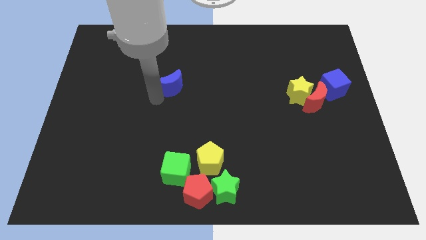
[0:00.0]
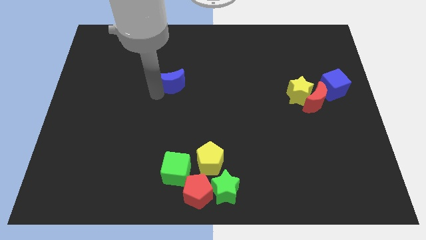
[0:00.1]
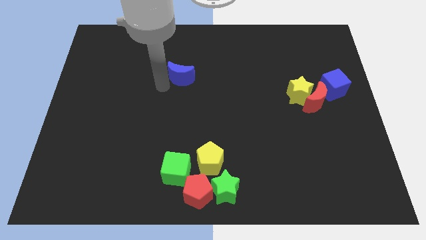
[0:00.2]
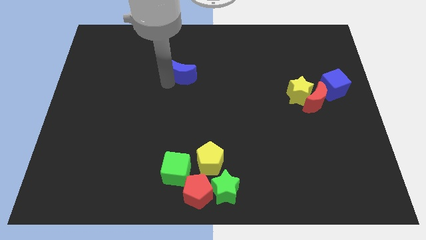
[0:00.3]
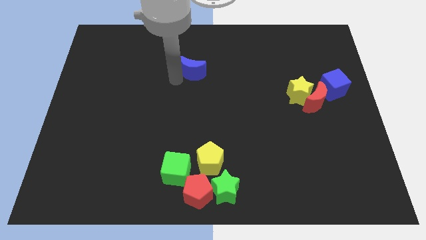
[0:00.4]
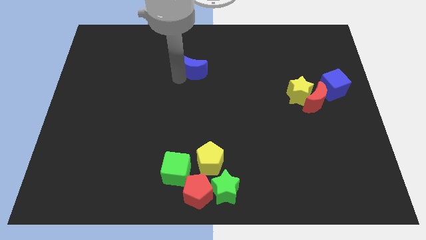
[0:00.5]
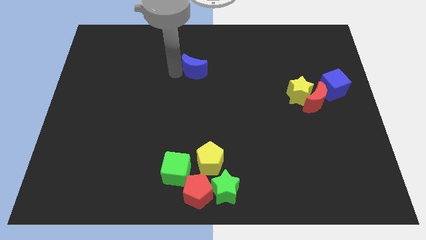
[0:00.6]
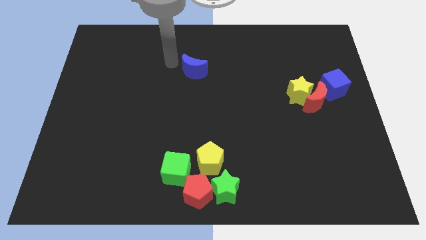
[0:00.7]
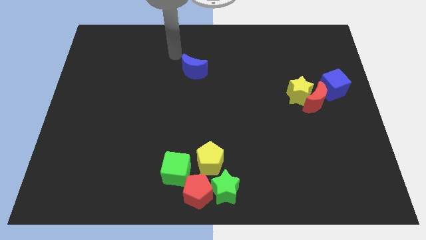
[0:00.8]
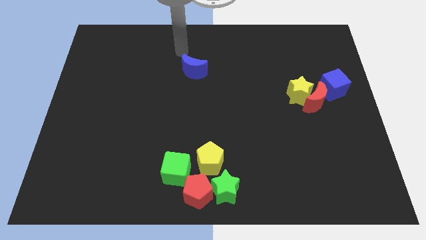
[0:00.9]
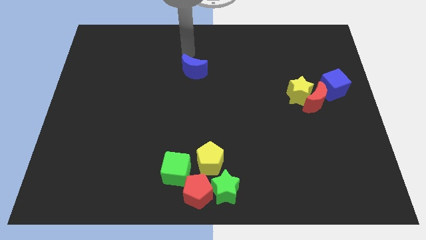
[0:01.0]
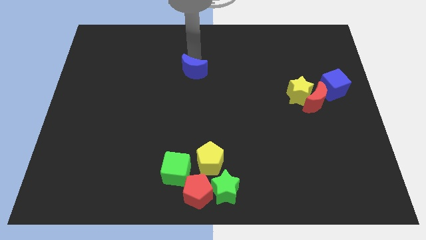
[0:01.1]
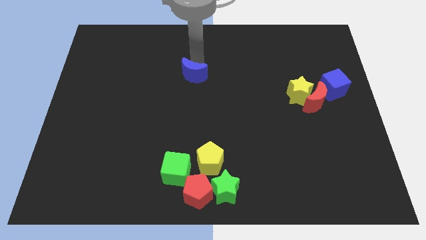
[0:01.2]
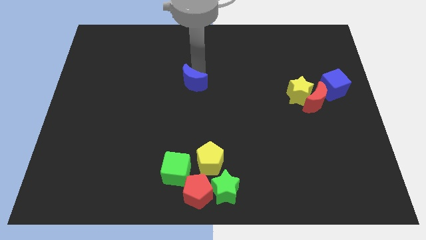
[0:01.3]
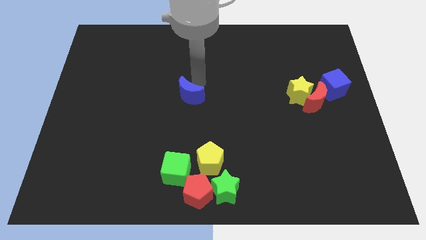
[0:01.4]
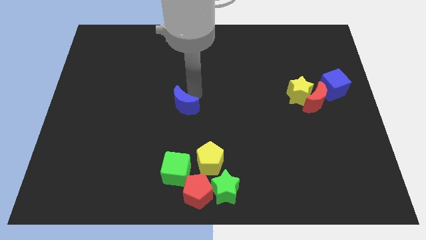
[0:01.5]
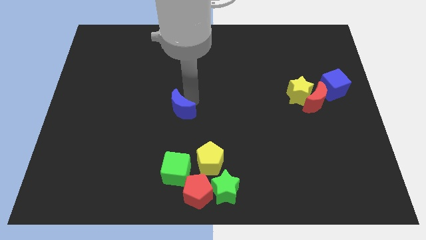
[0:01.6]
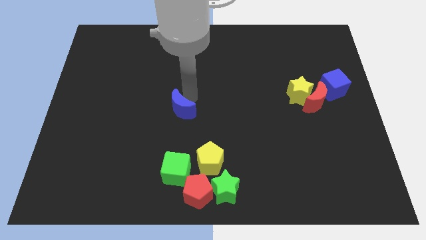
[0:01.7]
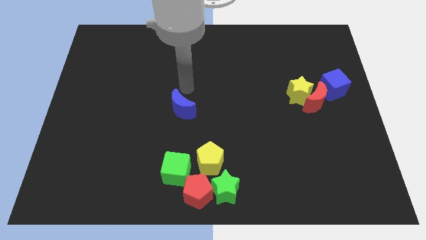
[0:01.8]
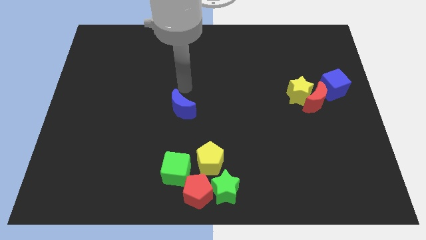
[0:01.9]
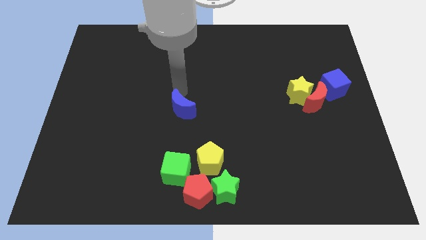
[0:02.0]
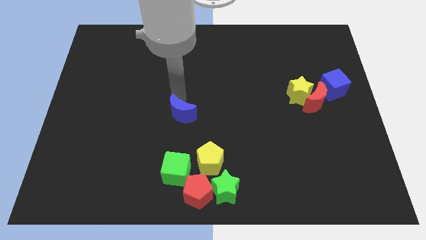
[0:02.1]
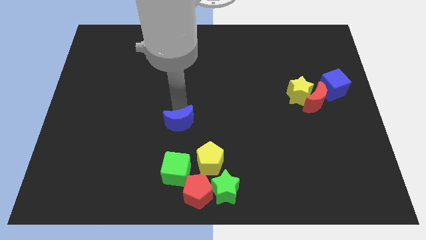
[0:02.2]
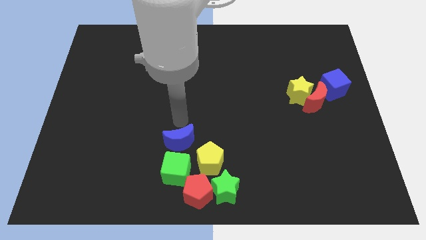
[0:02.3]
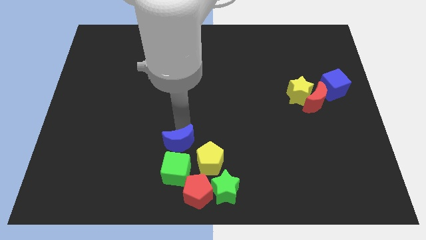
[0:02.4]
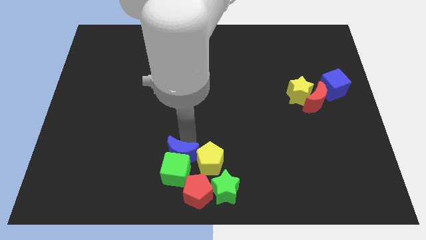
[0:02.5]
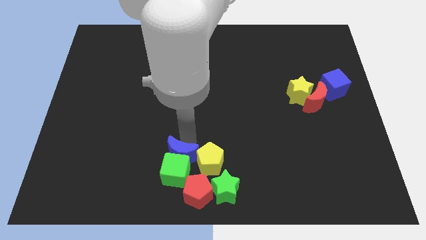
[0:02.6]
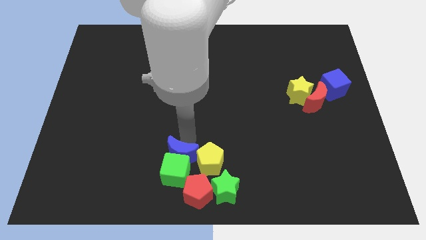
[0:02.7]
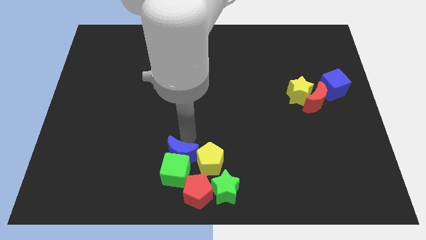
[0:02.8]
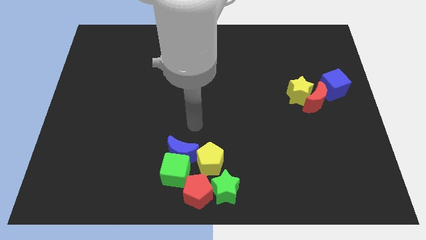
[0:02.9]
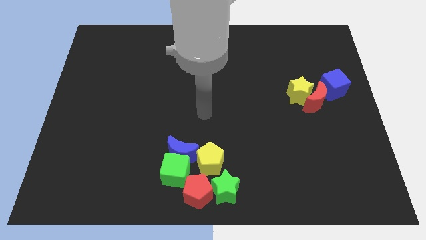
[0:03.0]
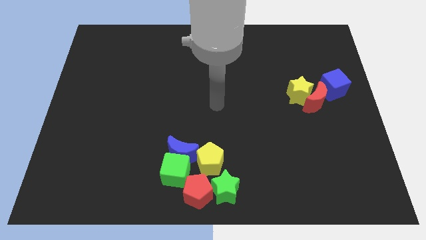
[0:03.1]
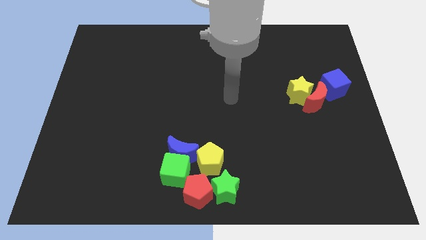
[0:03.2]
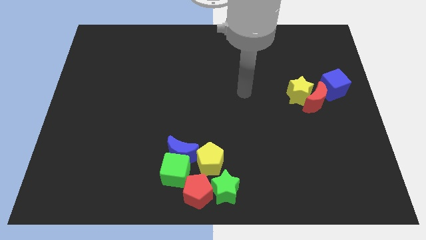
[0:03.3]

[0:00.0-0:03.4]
push the blue moon into a group of blocks

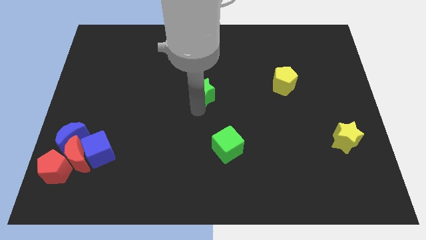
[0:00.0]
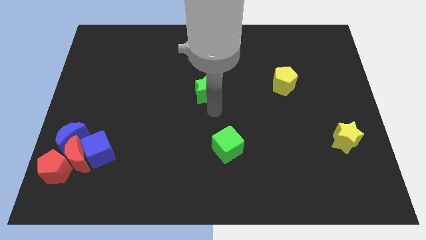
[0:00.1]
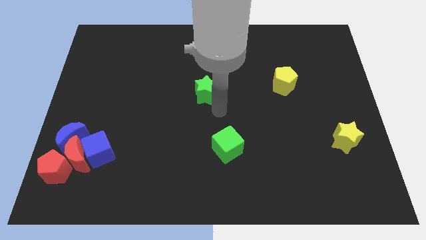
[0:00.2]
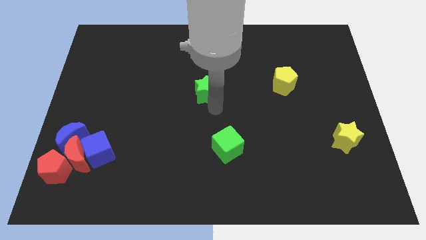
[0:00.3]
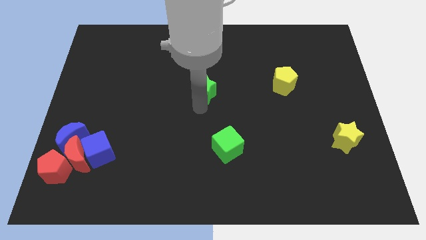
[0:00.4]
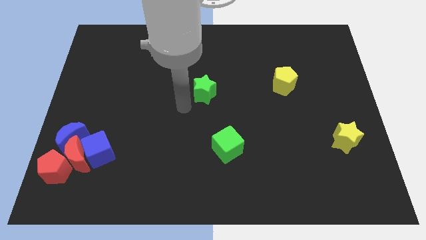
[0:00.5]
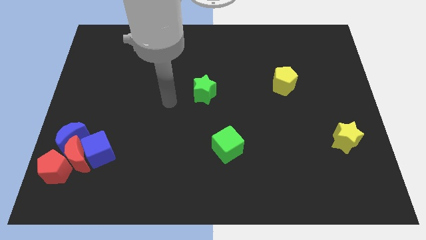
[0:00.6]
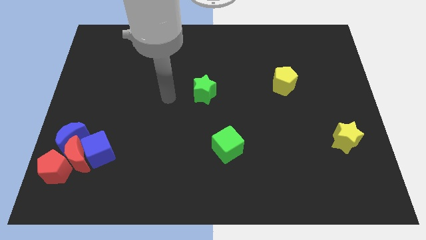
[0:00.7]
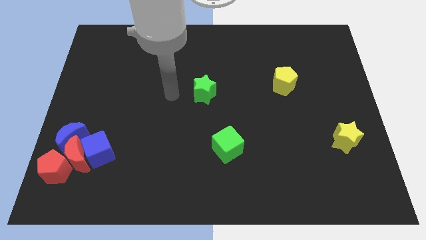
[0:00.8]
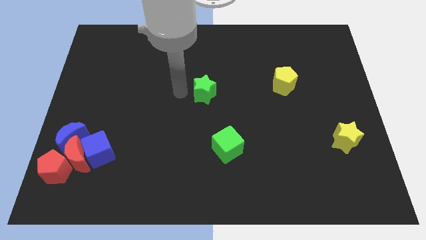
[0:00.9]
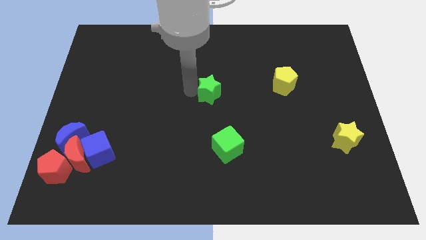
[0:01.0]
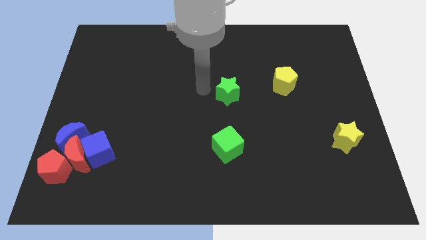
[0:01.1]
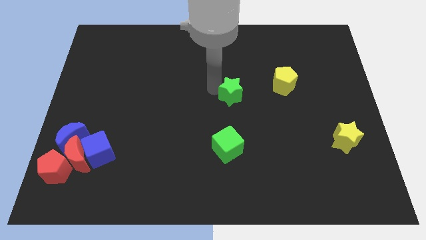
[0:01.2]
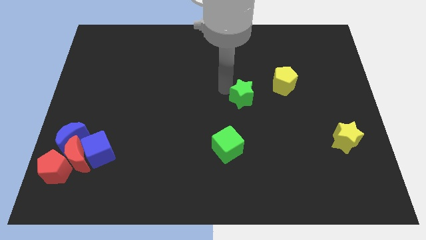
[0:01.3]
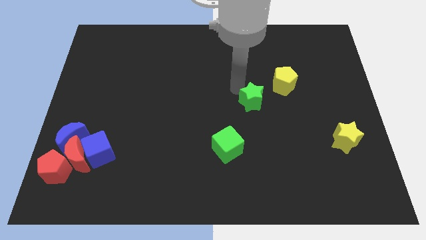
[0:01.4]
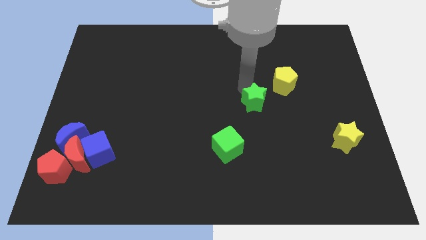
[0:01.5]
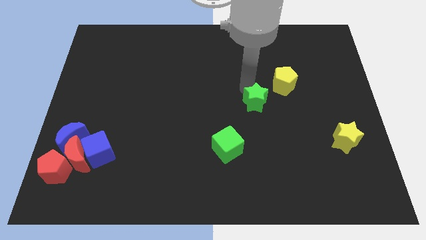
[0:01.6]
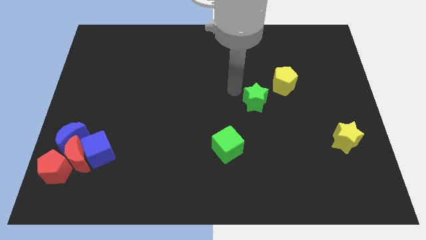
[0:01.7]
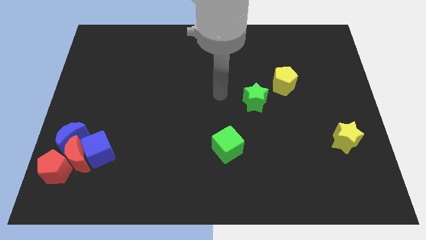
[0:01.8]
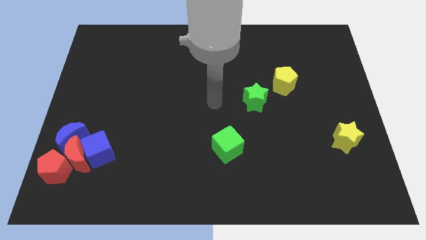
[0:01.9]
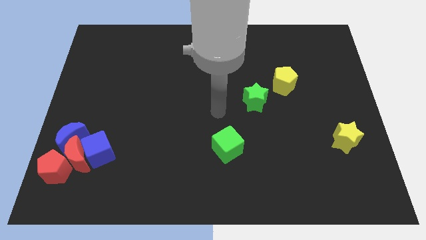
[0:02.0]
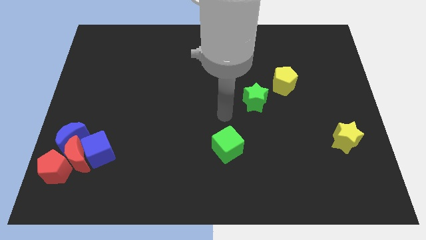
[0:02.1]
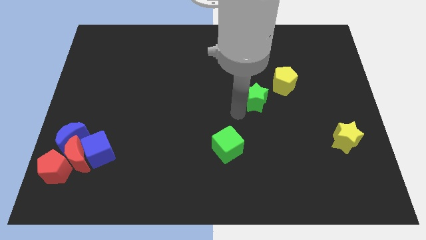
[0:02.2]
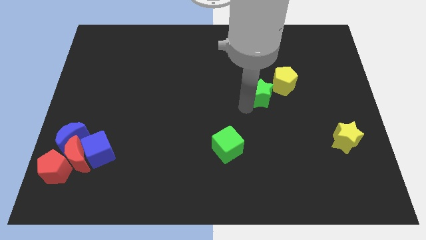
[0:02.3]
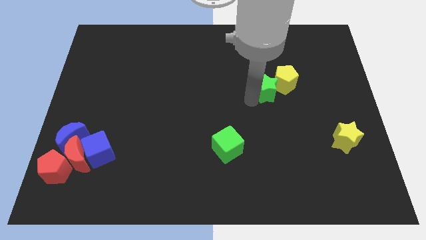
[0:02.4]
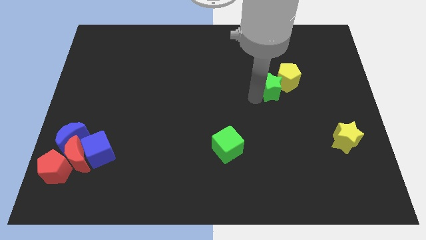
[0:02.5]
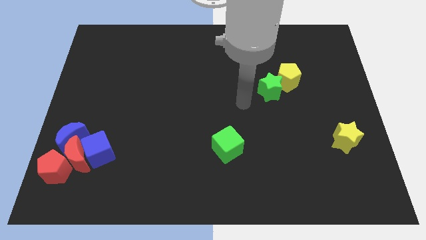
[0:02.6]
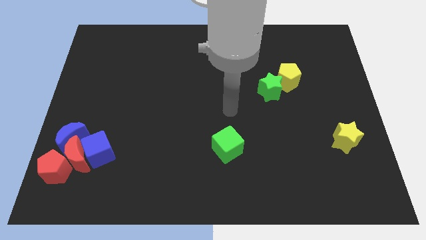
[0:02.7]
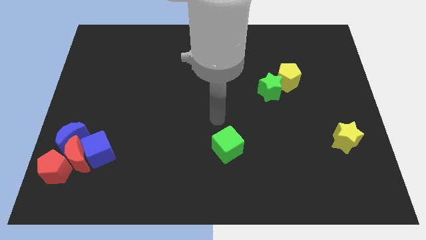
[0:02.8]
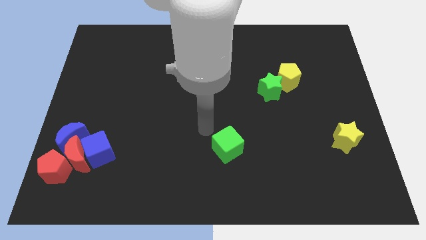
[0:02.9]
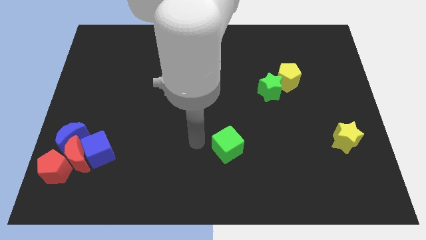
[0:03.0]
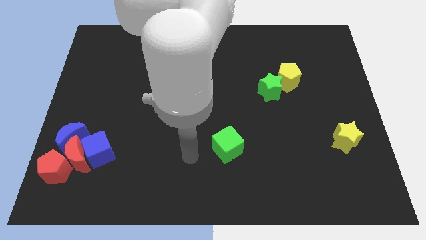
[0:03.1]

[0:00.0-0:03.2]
push the green star into the yellow pentagon

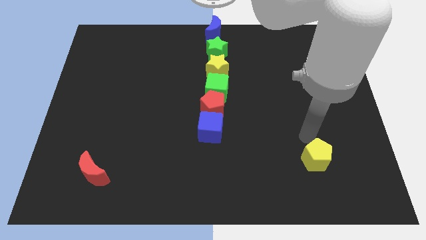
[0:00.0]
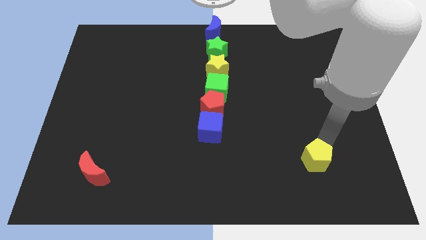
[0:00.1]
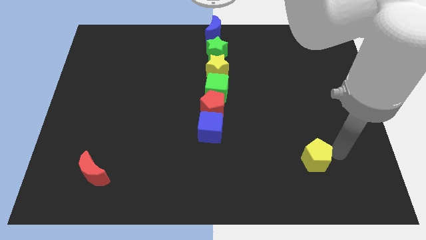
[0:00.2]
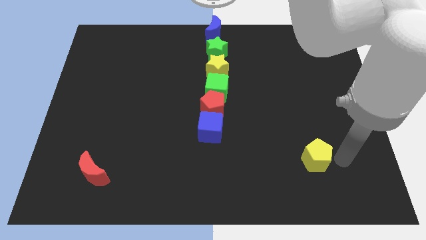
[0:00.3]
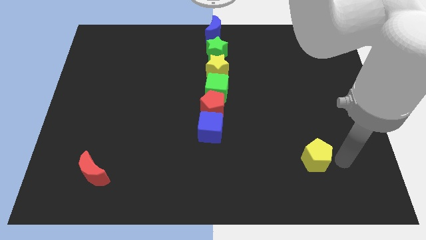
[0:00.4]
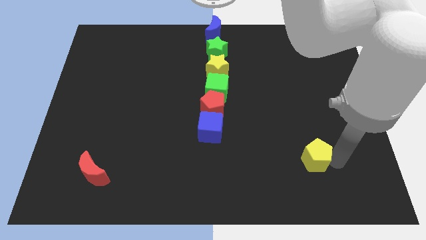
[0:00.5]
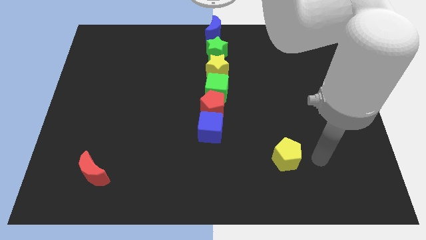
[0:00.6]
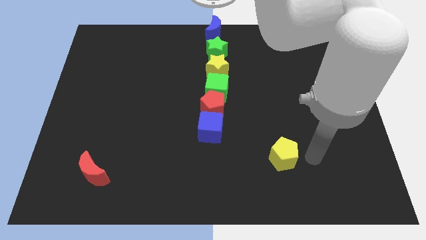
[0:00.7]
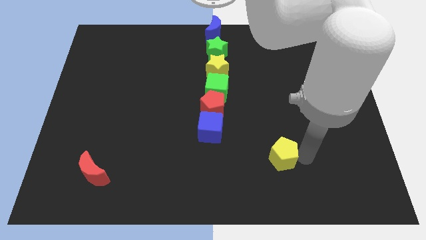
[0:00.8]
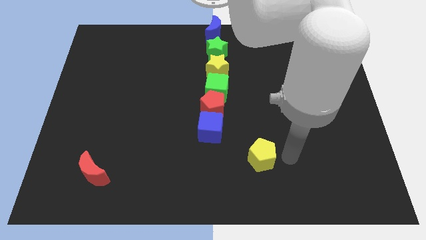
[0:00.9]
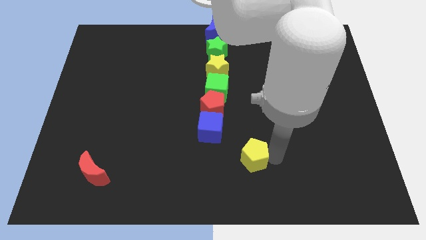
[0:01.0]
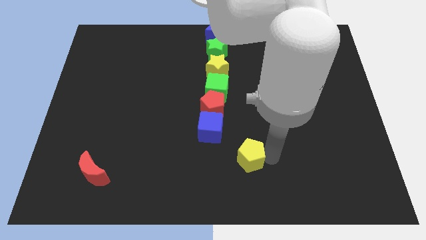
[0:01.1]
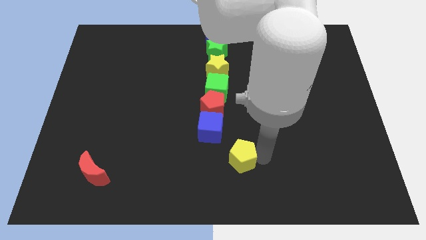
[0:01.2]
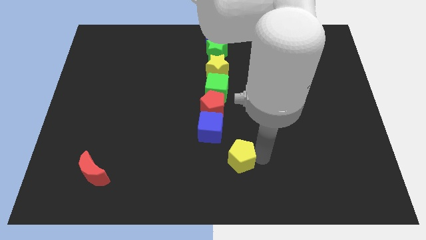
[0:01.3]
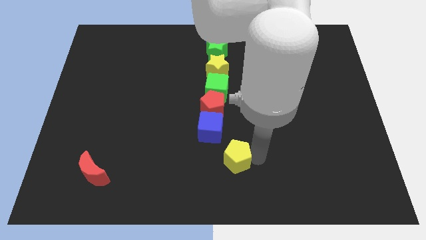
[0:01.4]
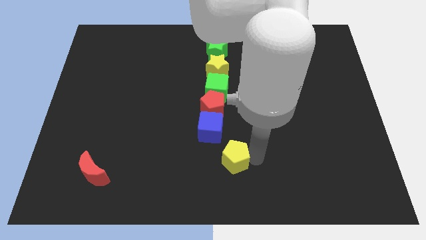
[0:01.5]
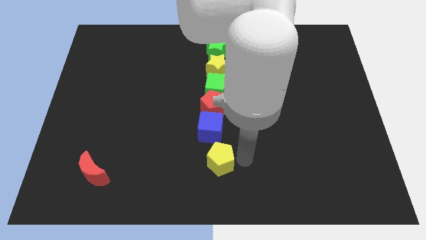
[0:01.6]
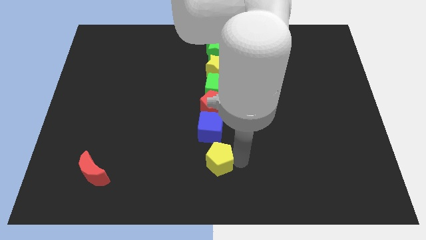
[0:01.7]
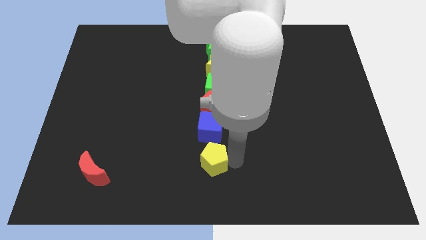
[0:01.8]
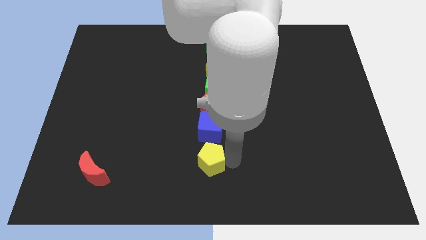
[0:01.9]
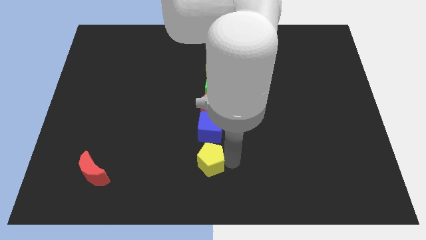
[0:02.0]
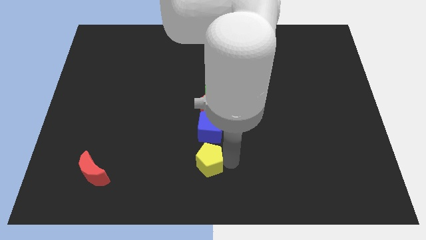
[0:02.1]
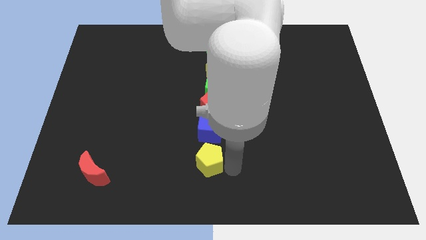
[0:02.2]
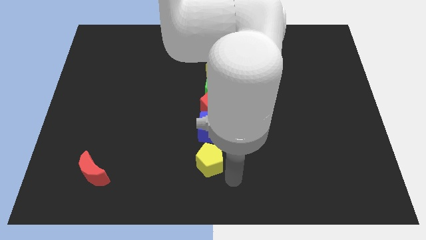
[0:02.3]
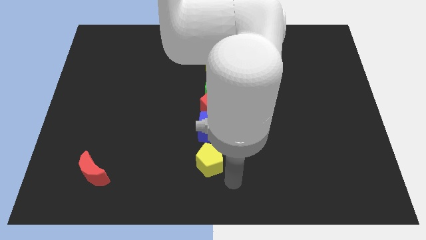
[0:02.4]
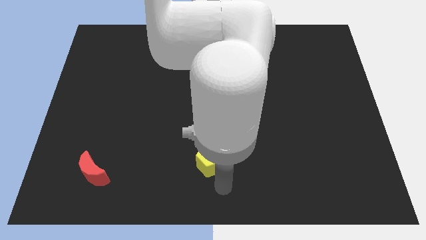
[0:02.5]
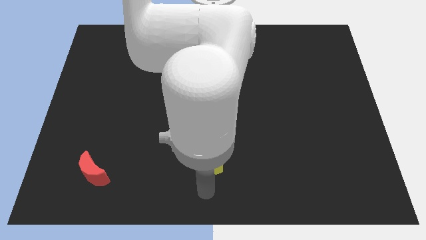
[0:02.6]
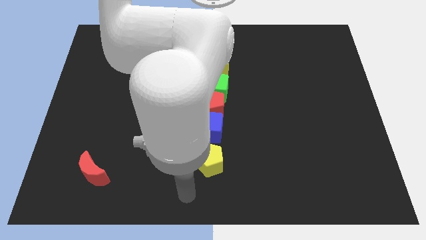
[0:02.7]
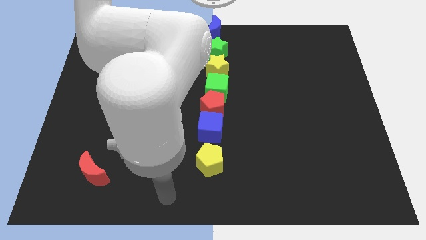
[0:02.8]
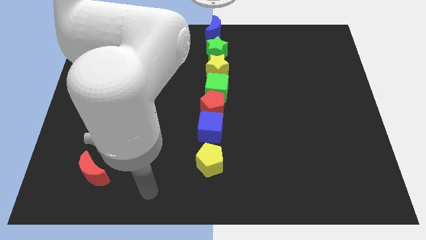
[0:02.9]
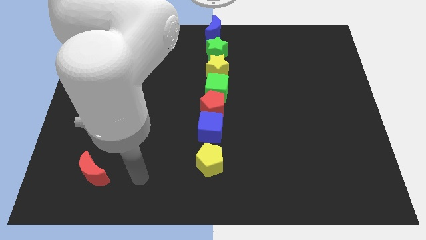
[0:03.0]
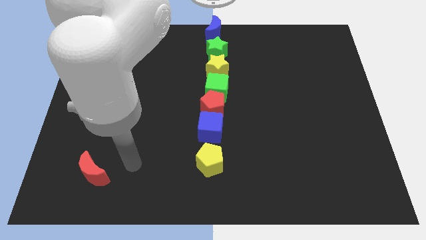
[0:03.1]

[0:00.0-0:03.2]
drag the yellow pentagon below the blue cube
